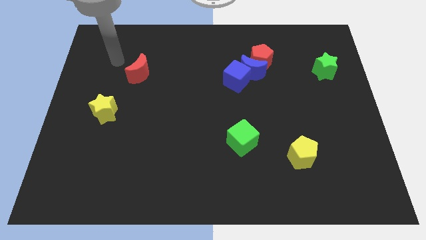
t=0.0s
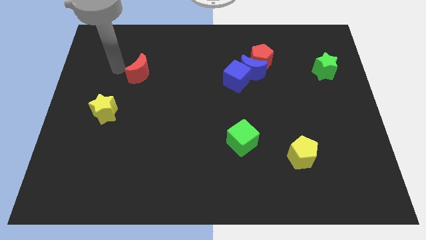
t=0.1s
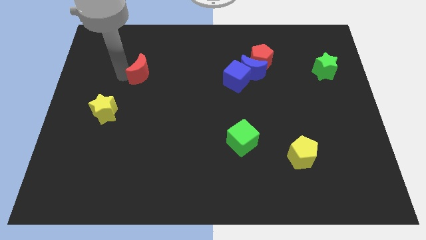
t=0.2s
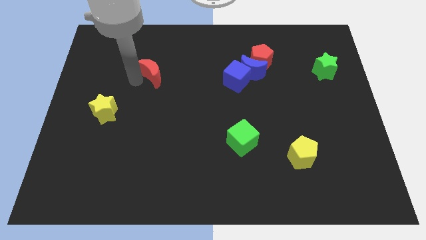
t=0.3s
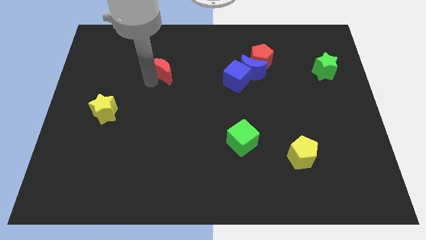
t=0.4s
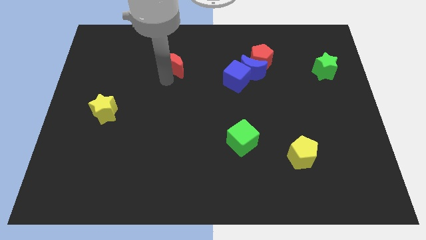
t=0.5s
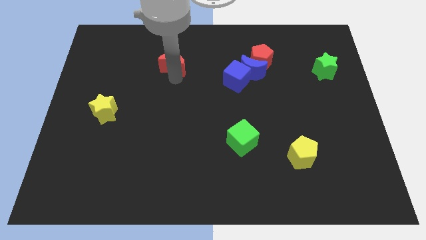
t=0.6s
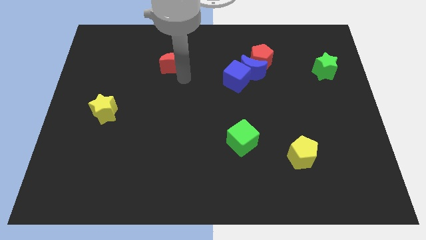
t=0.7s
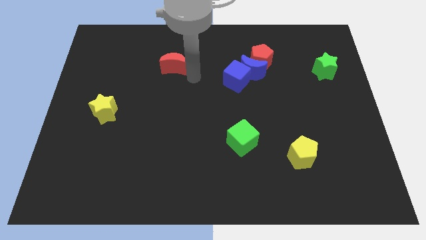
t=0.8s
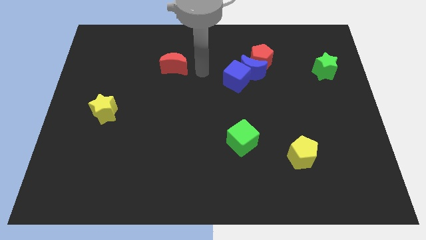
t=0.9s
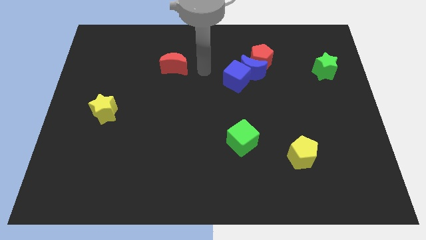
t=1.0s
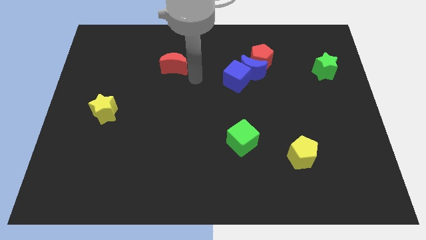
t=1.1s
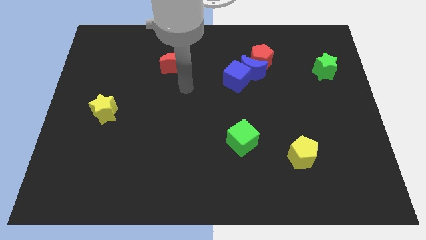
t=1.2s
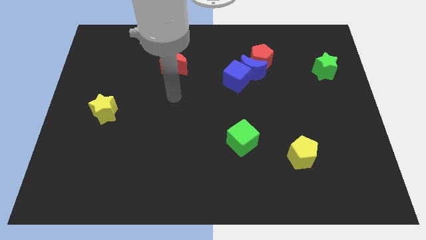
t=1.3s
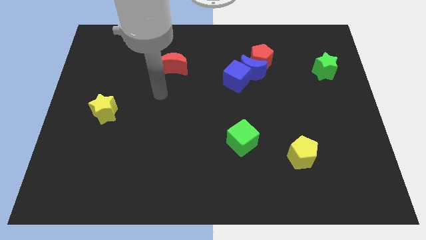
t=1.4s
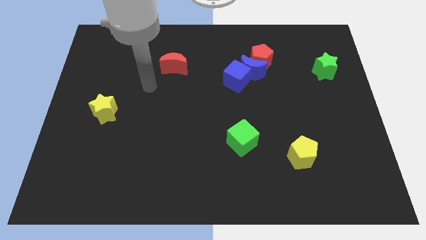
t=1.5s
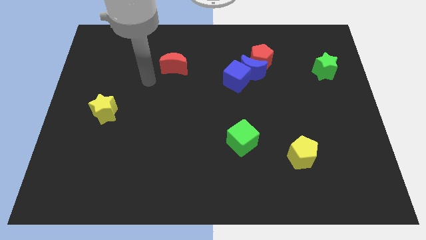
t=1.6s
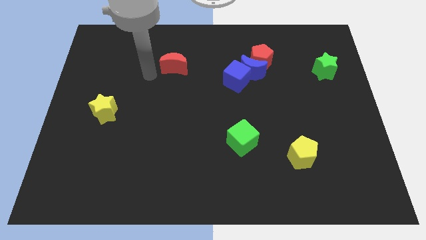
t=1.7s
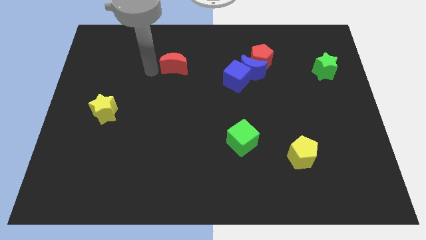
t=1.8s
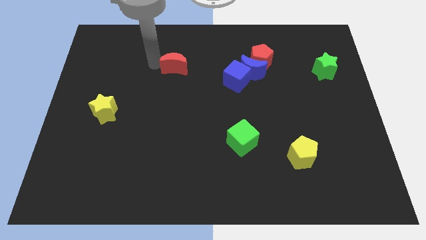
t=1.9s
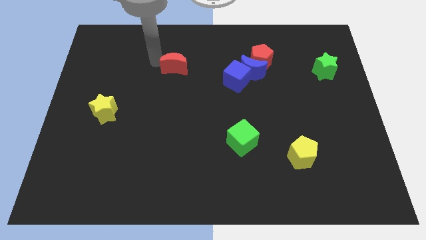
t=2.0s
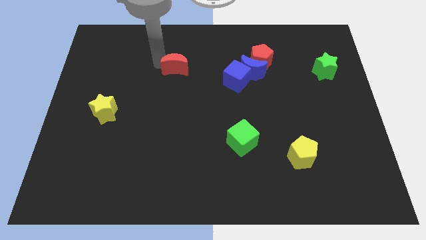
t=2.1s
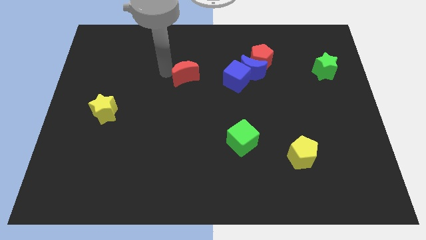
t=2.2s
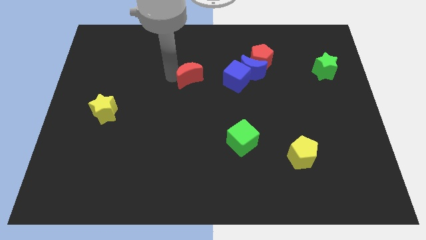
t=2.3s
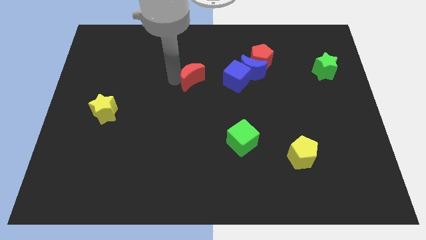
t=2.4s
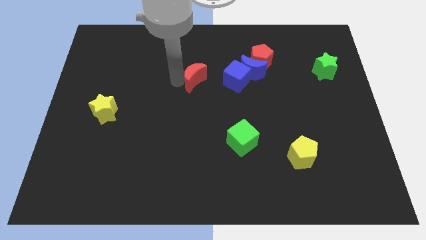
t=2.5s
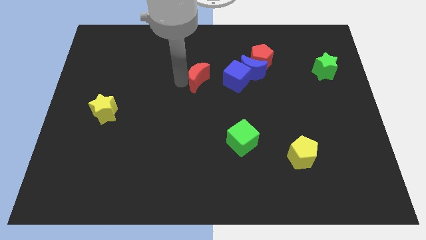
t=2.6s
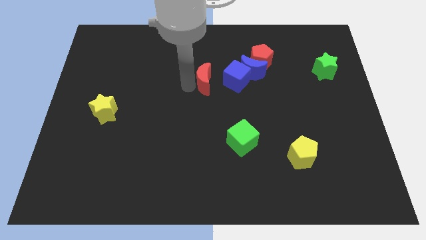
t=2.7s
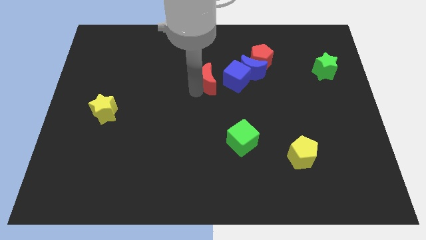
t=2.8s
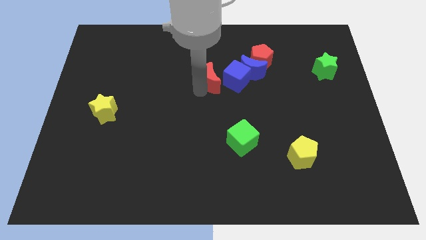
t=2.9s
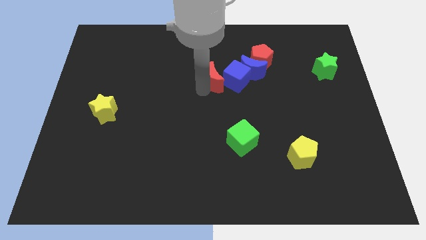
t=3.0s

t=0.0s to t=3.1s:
move red crescent to the top center

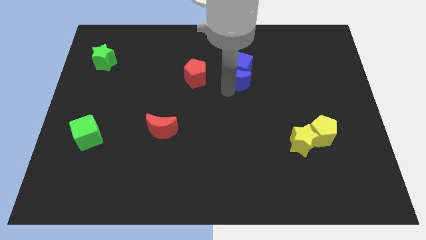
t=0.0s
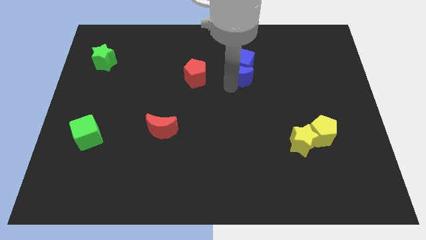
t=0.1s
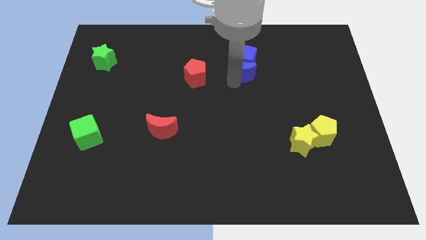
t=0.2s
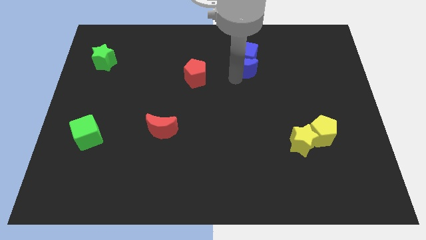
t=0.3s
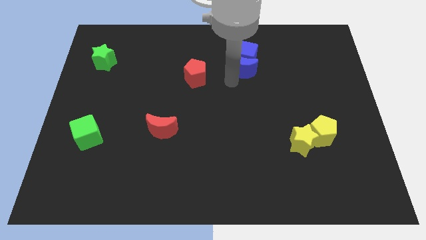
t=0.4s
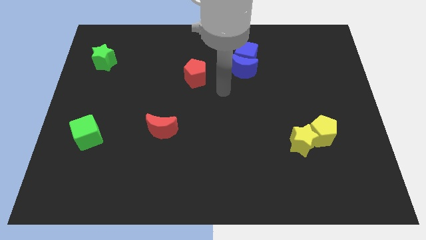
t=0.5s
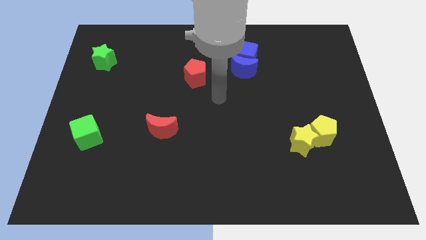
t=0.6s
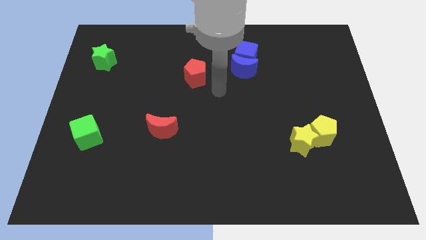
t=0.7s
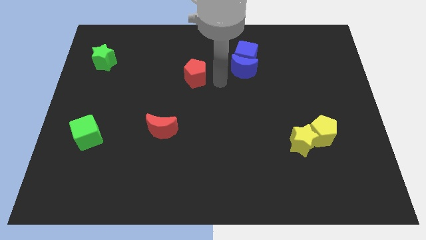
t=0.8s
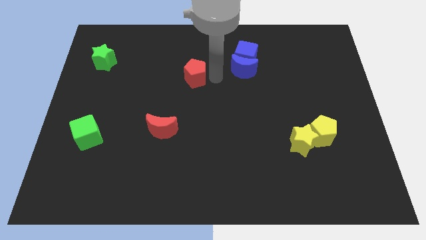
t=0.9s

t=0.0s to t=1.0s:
place the blue moon to the right of the red pentagon

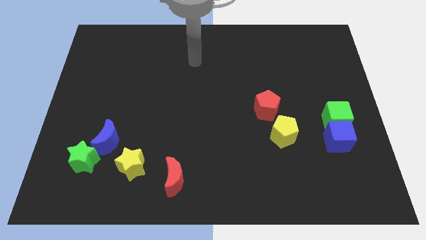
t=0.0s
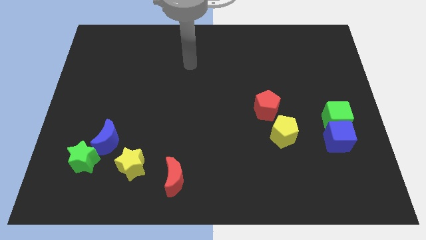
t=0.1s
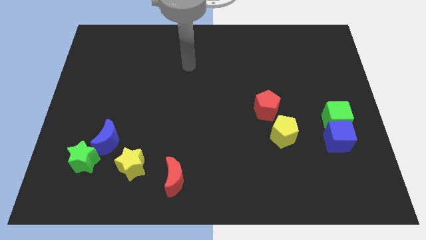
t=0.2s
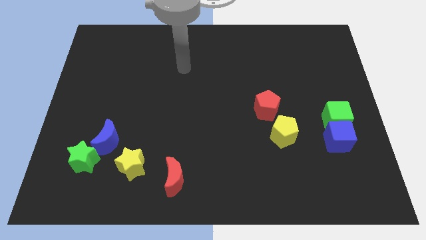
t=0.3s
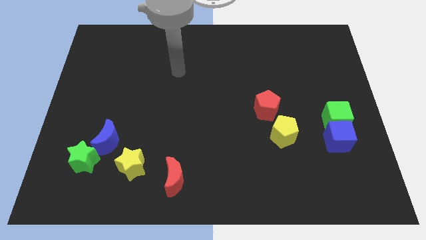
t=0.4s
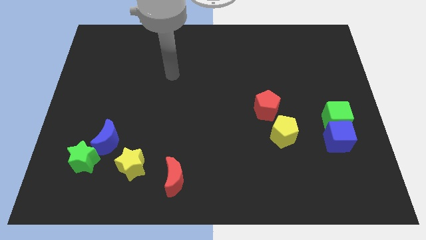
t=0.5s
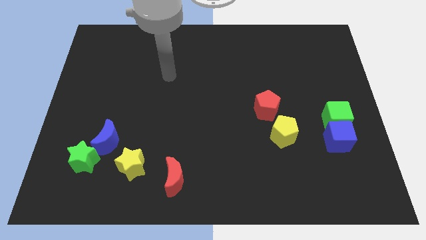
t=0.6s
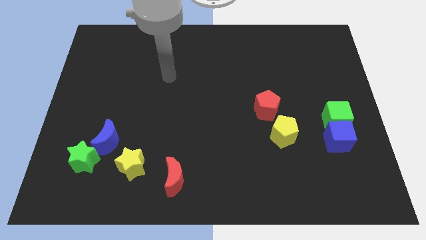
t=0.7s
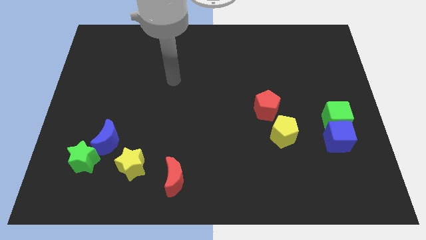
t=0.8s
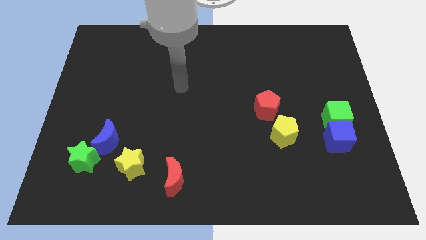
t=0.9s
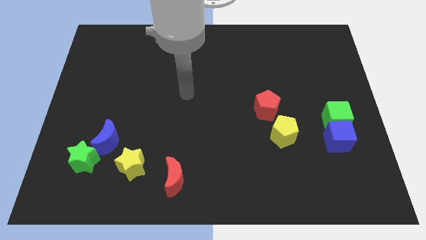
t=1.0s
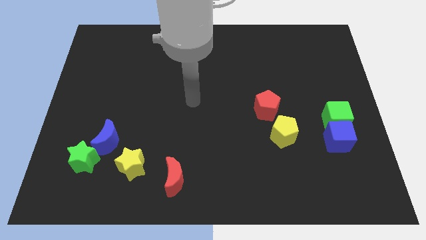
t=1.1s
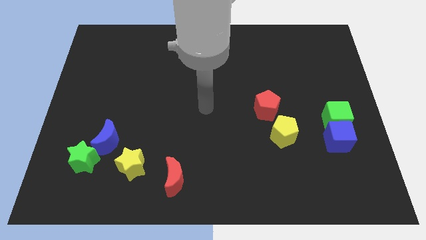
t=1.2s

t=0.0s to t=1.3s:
point your arm at the center of the board

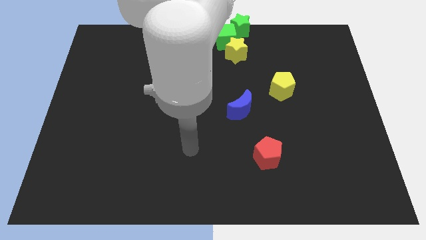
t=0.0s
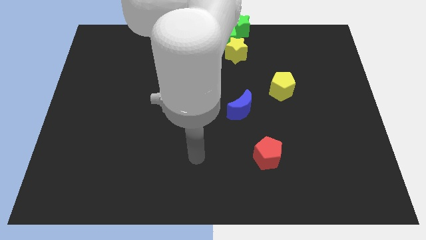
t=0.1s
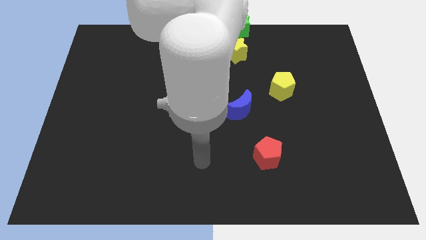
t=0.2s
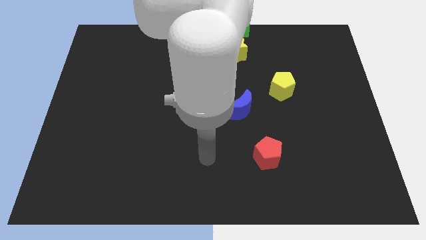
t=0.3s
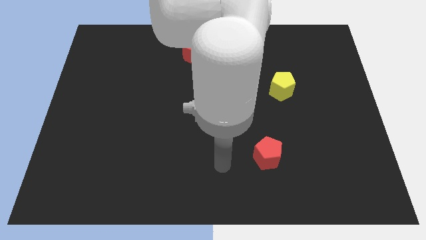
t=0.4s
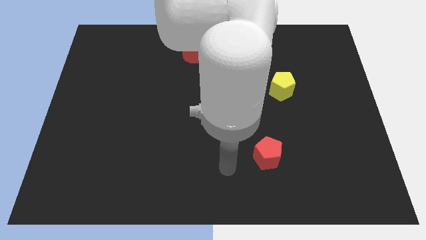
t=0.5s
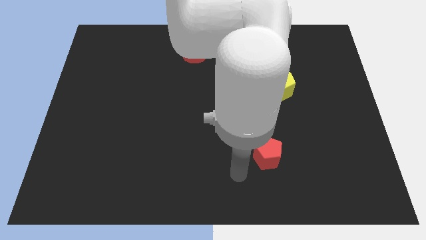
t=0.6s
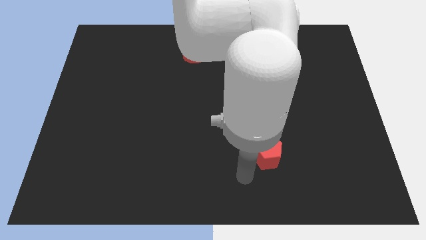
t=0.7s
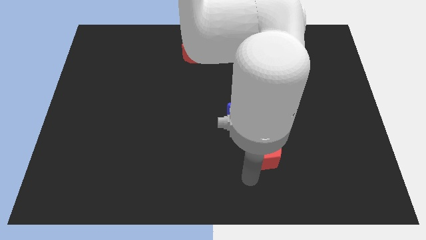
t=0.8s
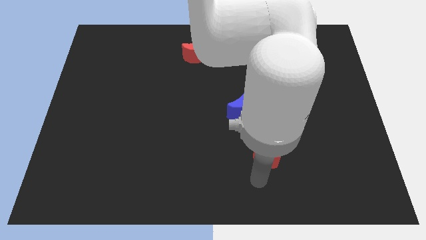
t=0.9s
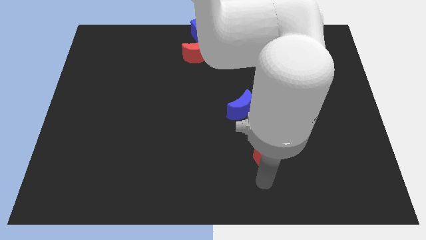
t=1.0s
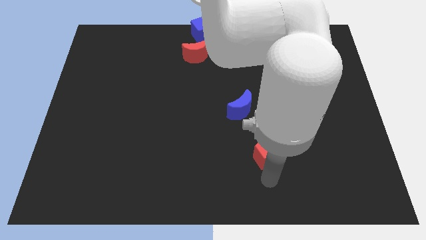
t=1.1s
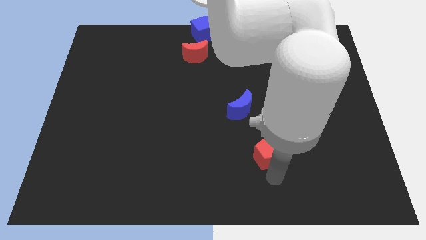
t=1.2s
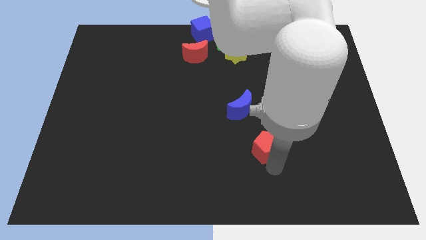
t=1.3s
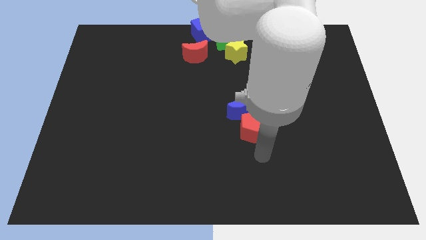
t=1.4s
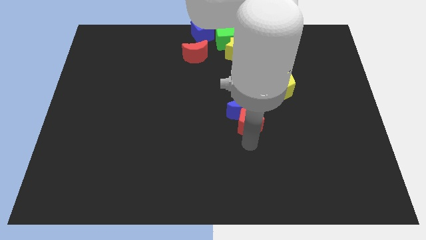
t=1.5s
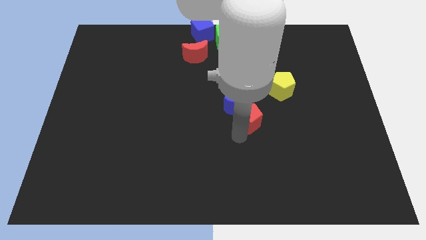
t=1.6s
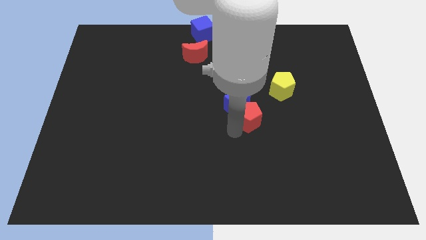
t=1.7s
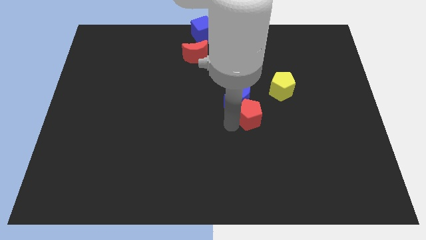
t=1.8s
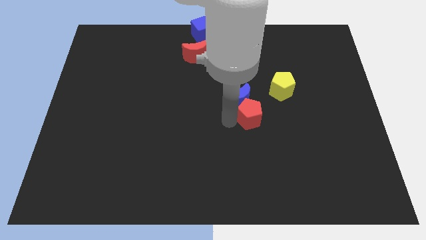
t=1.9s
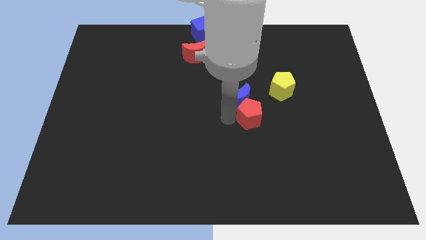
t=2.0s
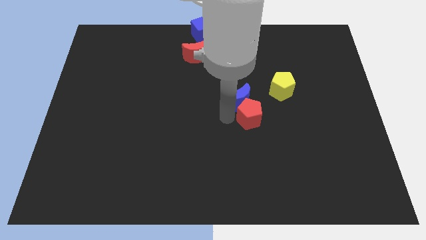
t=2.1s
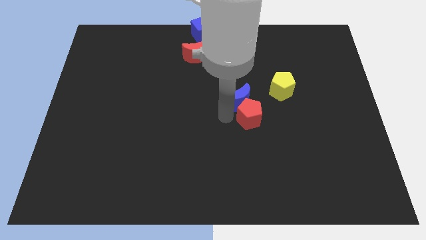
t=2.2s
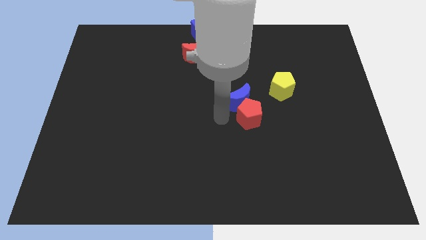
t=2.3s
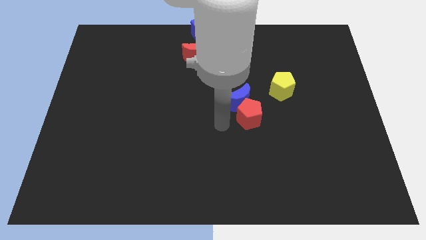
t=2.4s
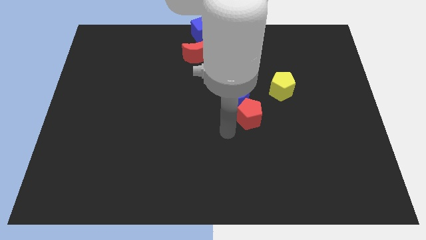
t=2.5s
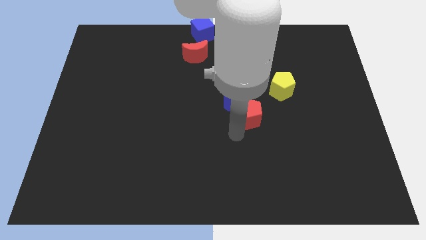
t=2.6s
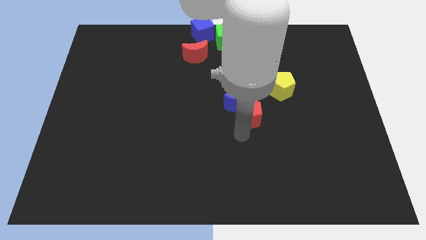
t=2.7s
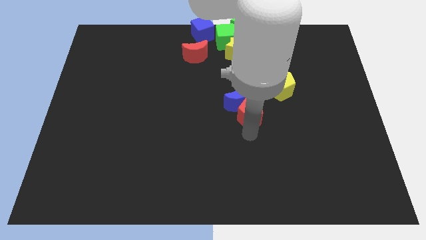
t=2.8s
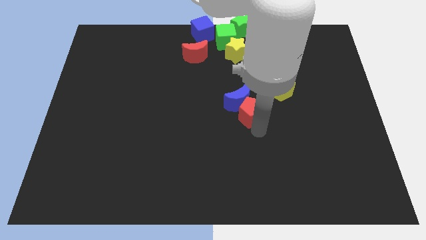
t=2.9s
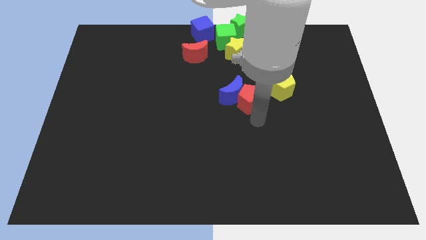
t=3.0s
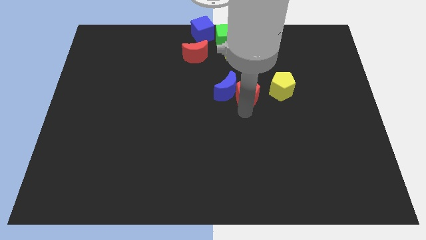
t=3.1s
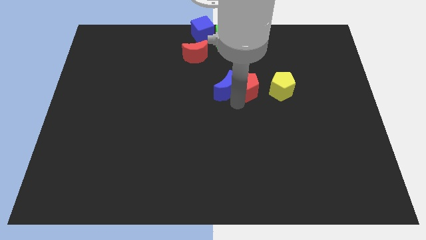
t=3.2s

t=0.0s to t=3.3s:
push the red pentagon into the blue moon

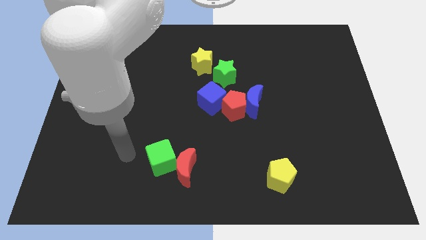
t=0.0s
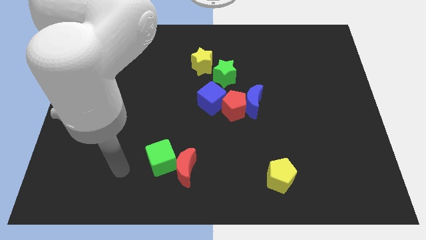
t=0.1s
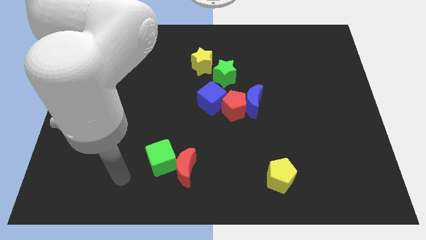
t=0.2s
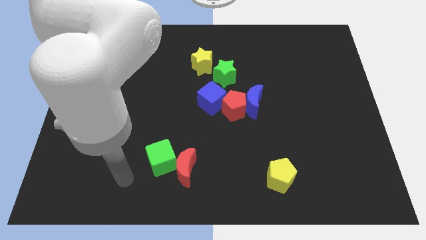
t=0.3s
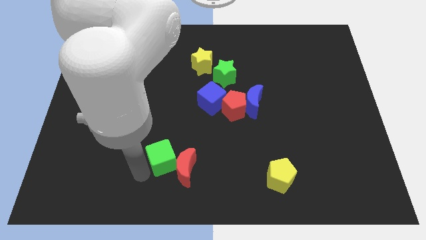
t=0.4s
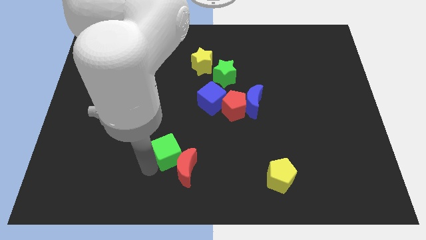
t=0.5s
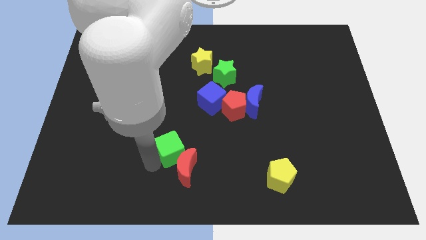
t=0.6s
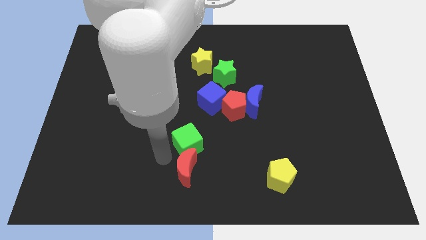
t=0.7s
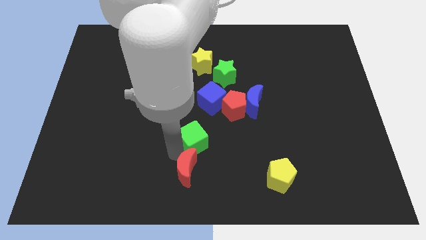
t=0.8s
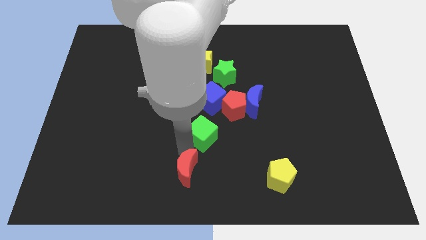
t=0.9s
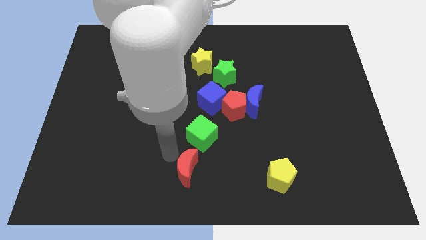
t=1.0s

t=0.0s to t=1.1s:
put green cube below blue cube
